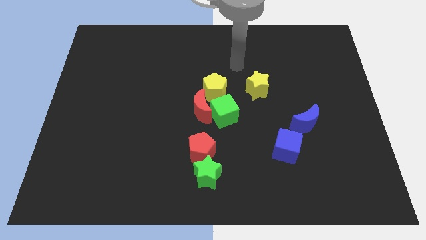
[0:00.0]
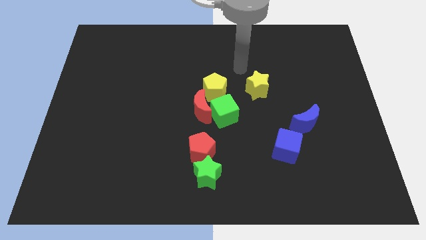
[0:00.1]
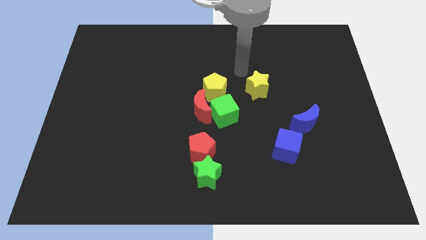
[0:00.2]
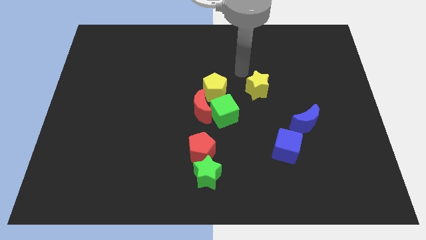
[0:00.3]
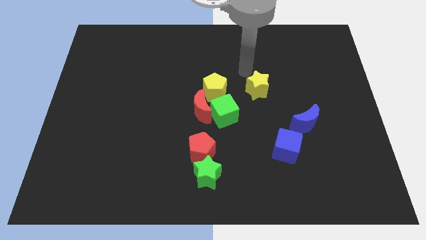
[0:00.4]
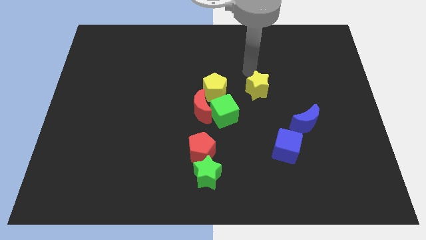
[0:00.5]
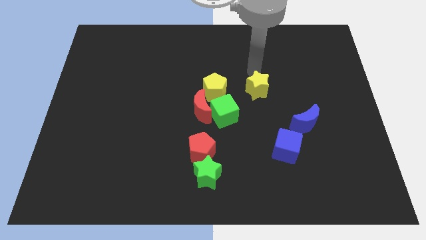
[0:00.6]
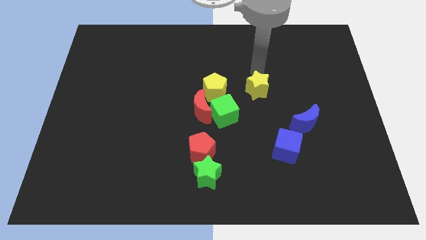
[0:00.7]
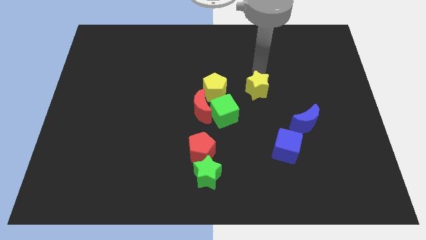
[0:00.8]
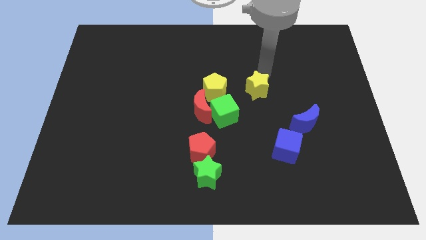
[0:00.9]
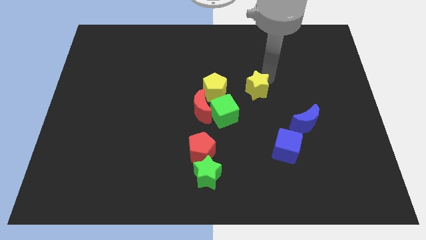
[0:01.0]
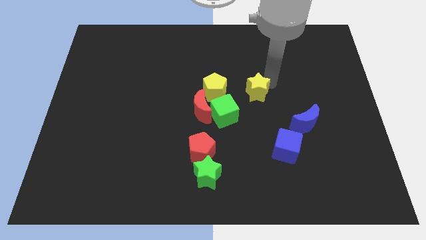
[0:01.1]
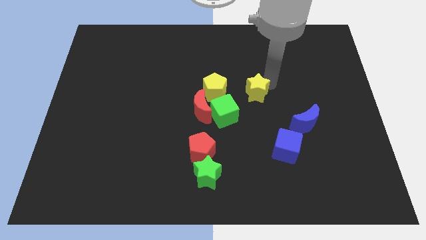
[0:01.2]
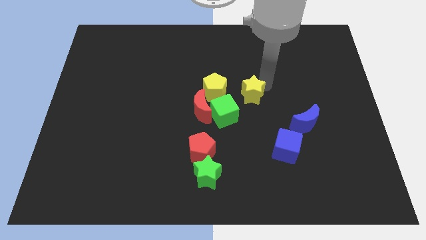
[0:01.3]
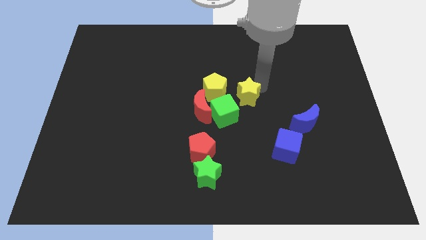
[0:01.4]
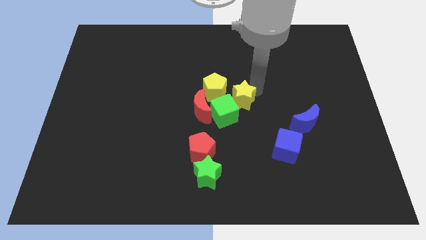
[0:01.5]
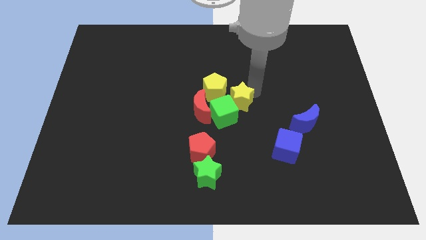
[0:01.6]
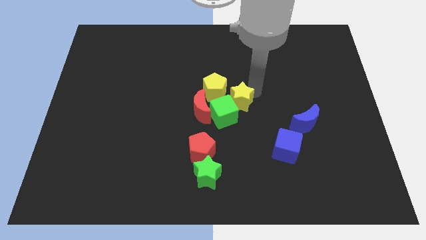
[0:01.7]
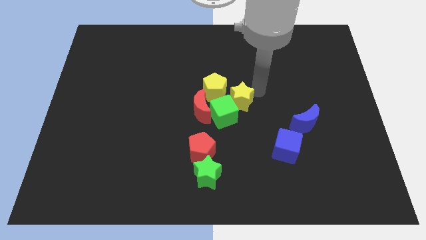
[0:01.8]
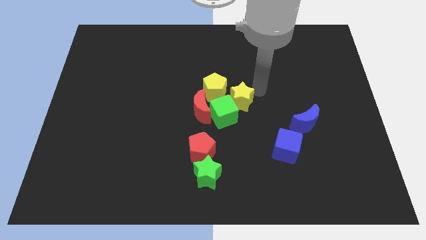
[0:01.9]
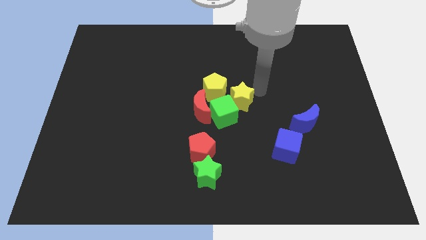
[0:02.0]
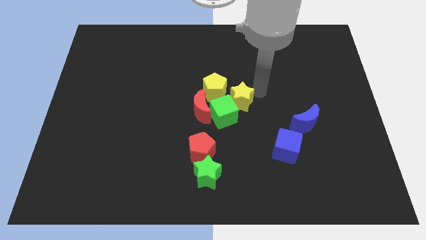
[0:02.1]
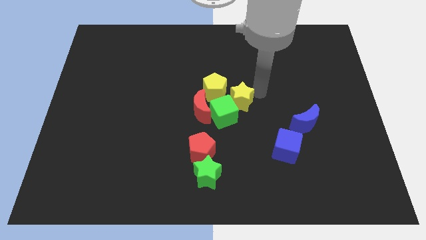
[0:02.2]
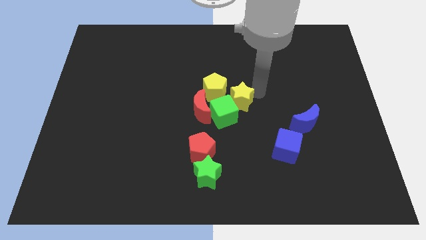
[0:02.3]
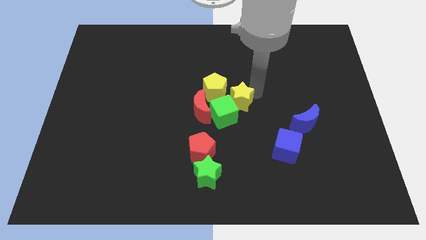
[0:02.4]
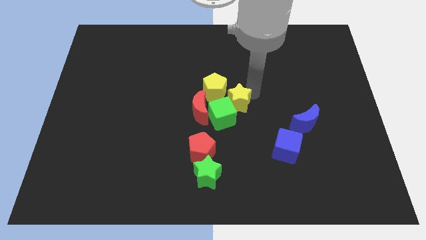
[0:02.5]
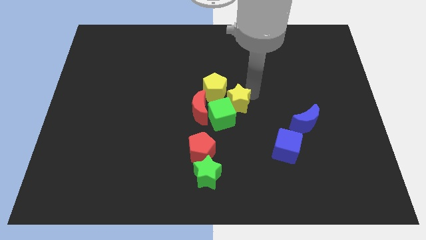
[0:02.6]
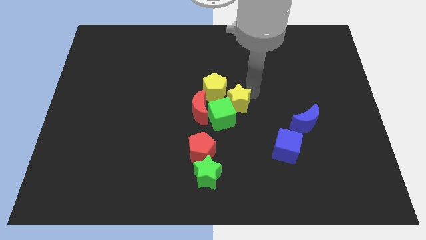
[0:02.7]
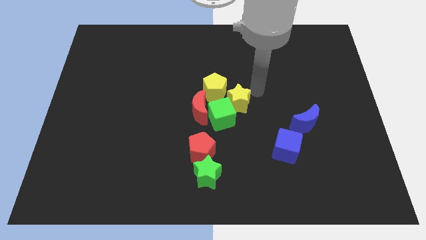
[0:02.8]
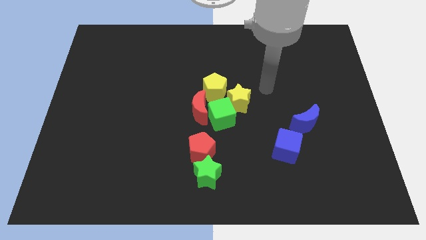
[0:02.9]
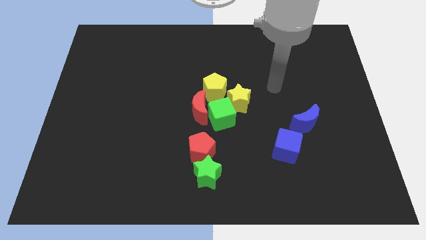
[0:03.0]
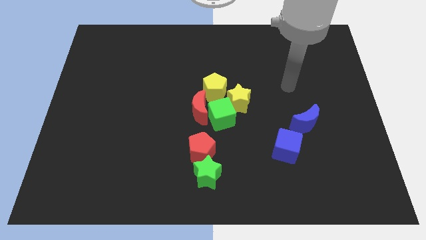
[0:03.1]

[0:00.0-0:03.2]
move the yellow star to the top right side of the green cube

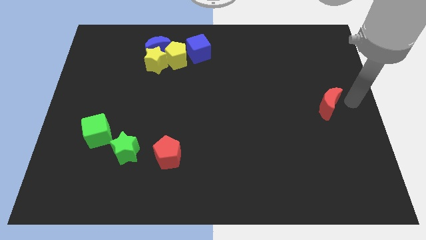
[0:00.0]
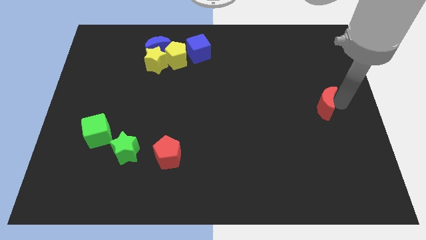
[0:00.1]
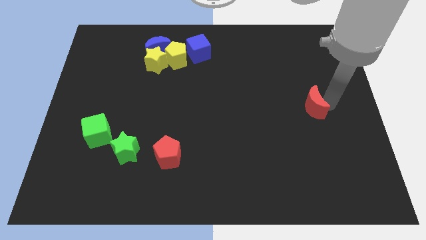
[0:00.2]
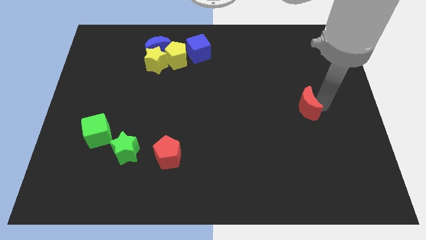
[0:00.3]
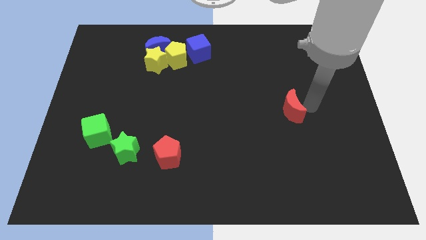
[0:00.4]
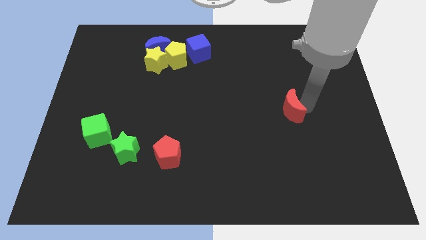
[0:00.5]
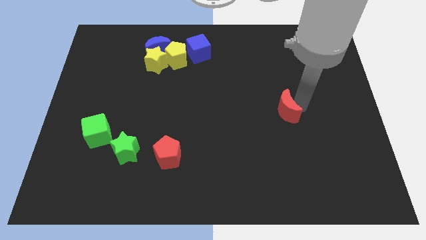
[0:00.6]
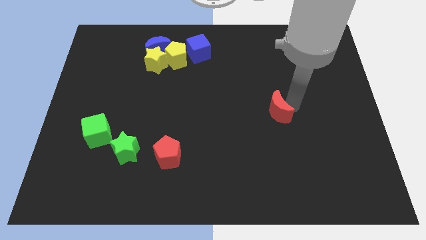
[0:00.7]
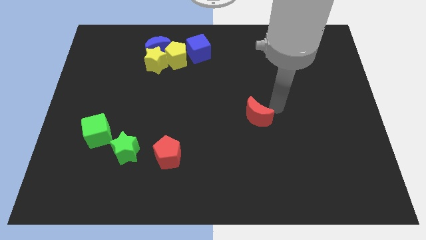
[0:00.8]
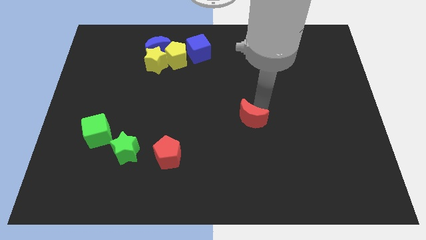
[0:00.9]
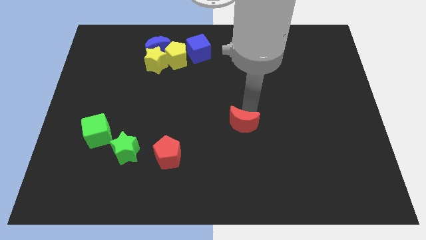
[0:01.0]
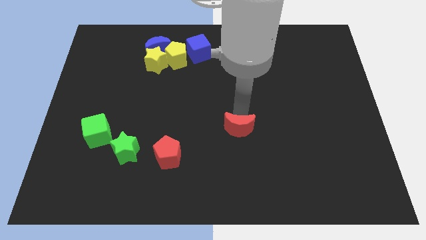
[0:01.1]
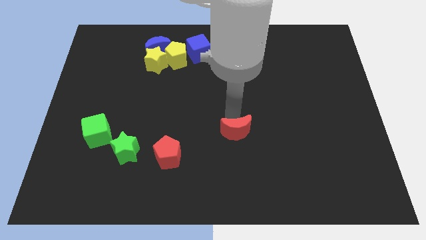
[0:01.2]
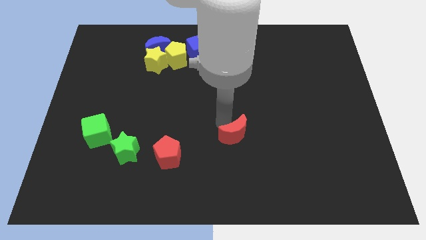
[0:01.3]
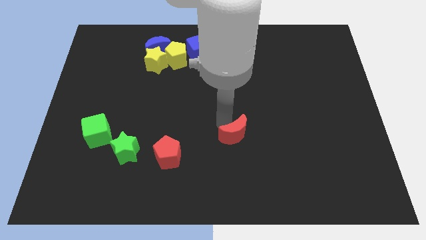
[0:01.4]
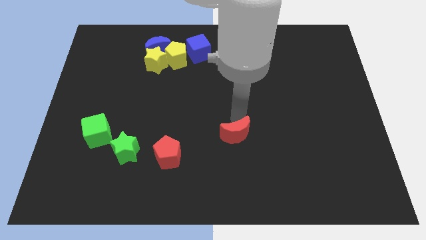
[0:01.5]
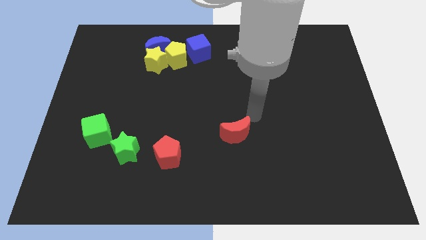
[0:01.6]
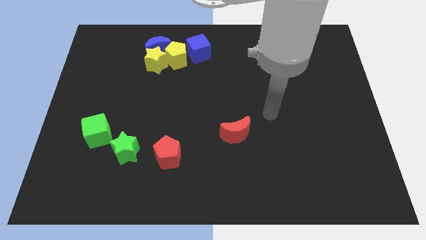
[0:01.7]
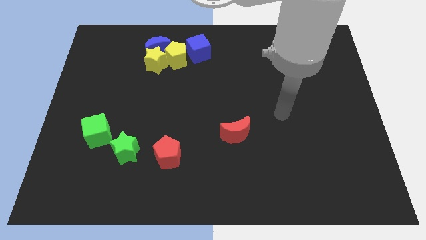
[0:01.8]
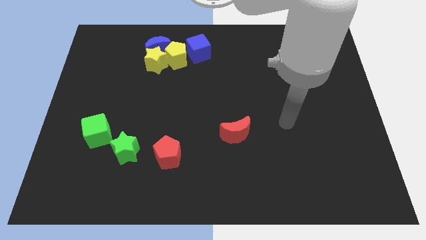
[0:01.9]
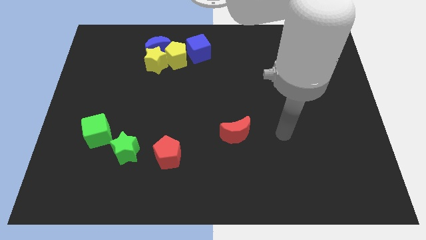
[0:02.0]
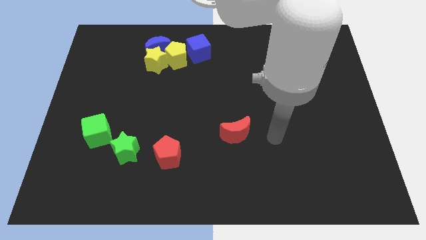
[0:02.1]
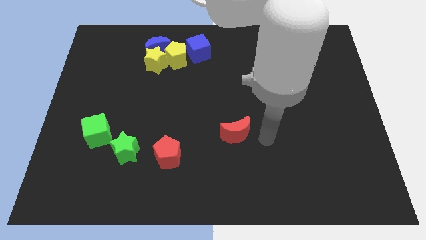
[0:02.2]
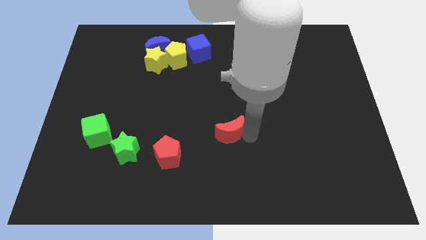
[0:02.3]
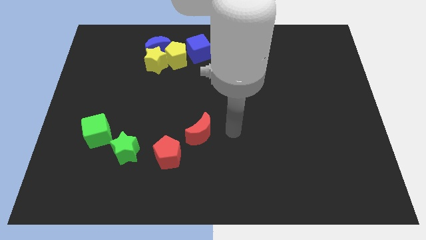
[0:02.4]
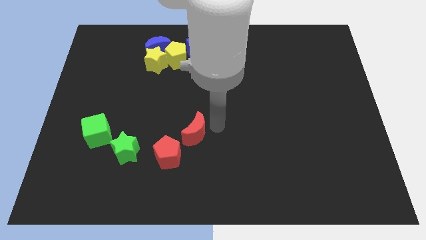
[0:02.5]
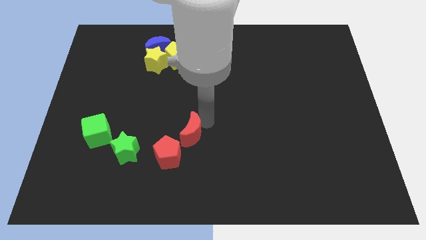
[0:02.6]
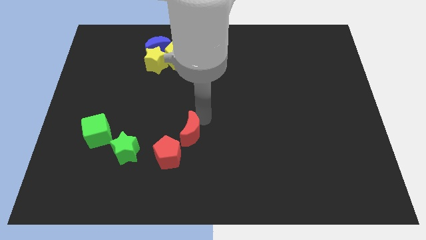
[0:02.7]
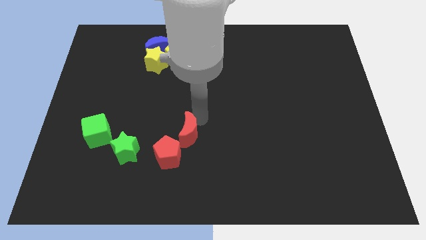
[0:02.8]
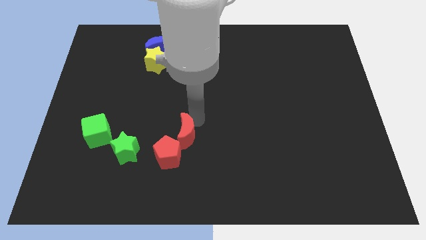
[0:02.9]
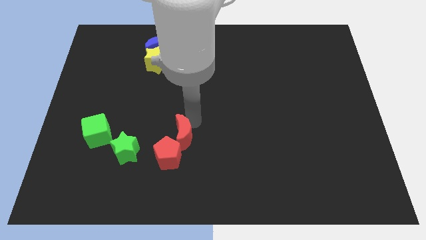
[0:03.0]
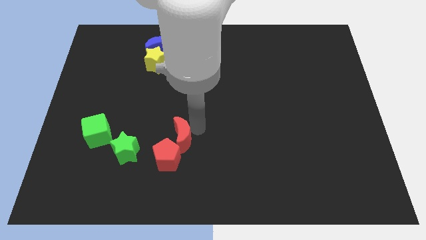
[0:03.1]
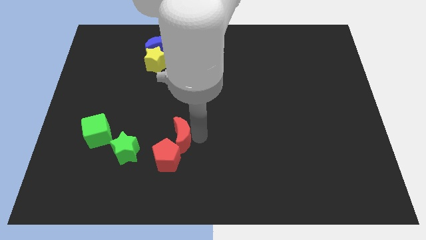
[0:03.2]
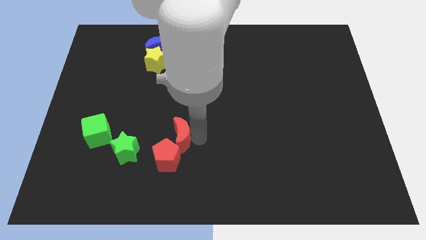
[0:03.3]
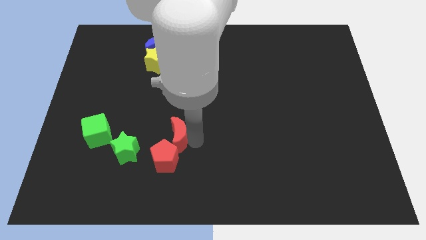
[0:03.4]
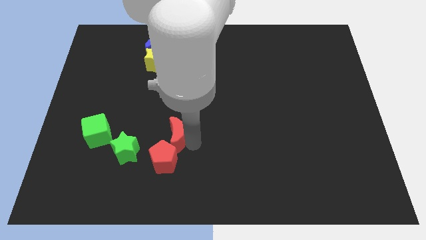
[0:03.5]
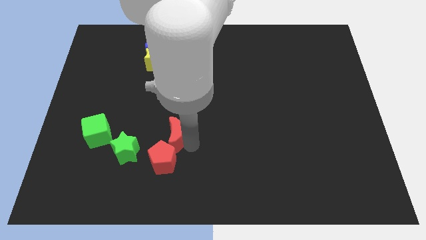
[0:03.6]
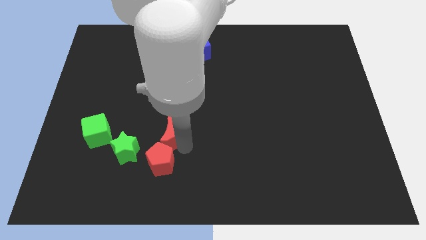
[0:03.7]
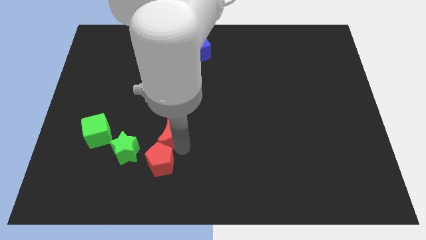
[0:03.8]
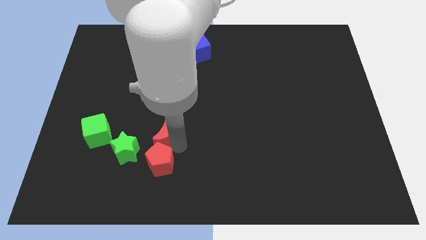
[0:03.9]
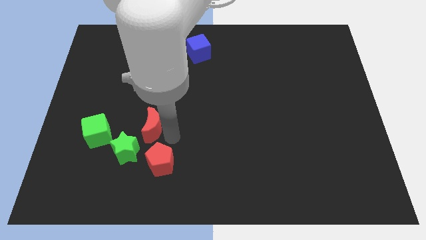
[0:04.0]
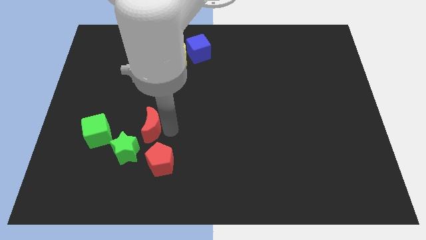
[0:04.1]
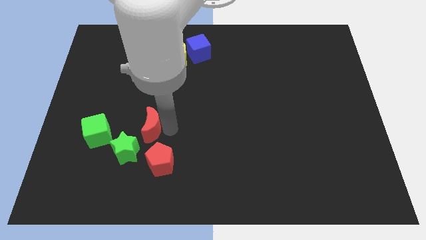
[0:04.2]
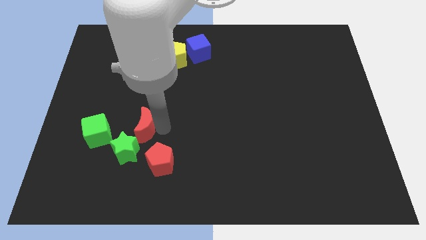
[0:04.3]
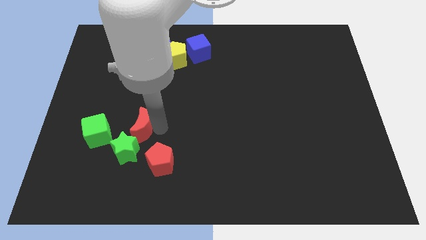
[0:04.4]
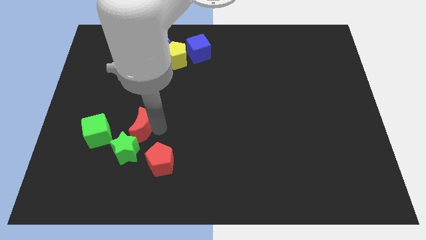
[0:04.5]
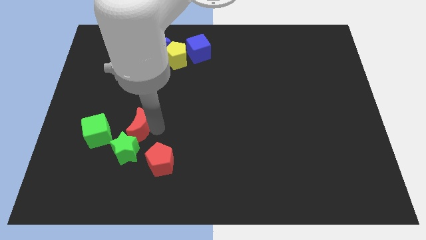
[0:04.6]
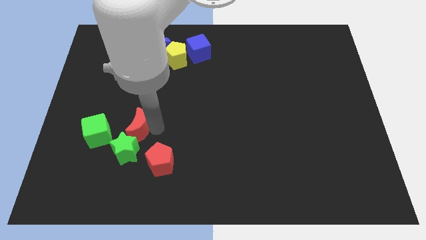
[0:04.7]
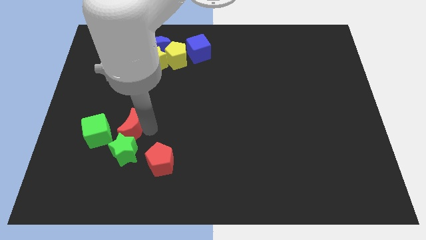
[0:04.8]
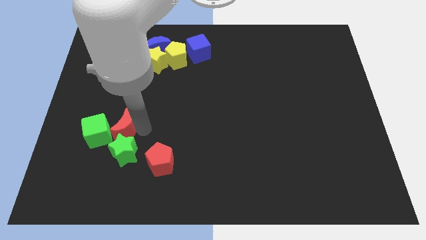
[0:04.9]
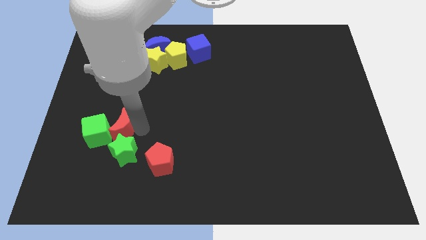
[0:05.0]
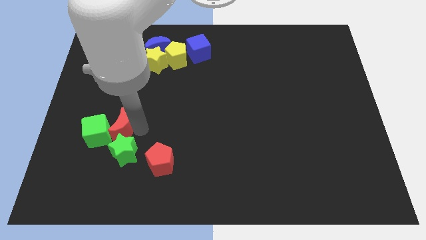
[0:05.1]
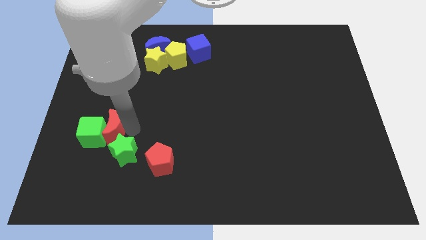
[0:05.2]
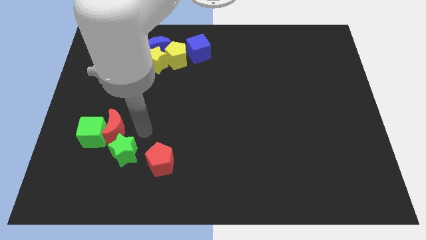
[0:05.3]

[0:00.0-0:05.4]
move the red crescent into the green cube

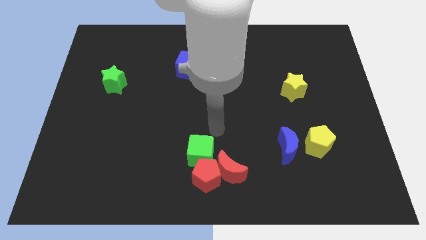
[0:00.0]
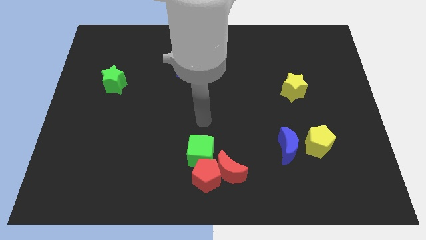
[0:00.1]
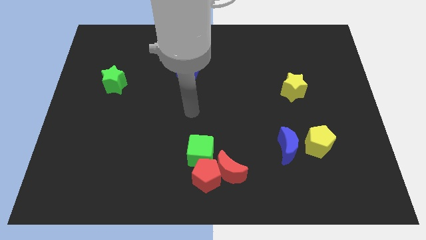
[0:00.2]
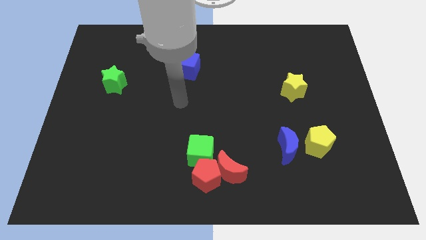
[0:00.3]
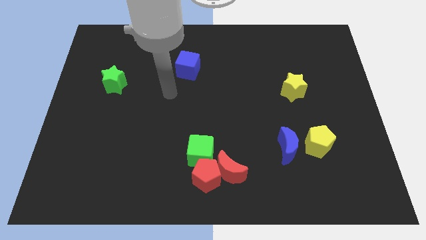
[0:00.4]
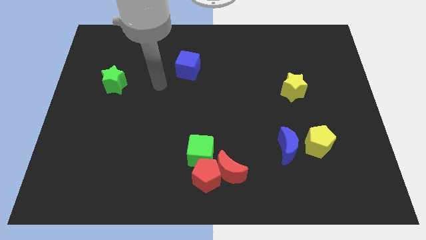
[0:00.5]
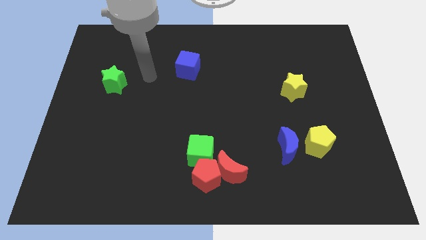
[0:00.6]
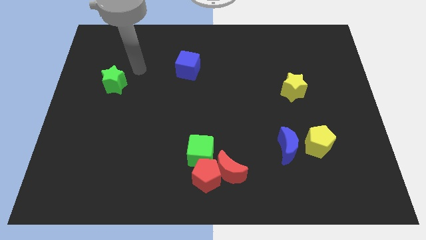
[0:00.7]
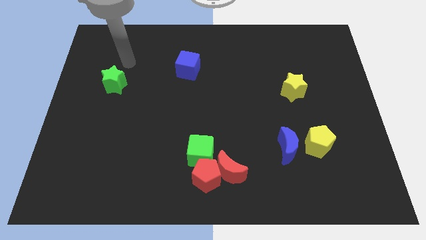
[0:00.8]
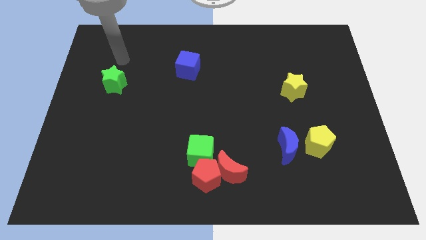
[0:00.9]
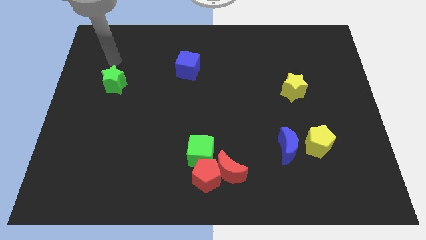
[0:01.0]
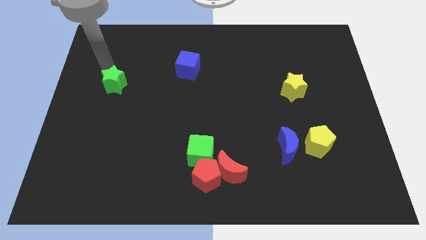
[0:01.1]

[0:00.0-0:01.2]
point your arm above the green star
